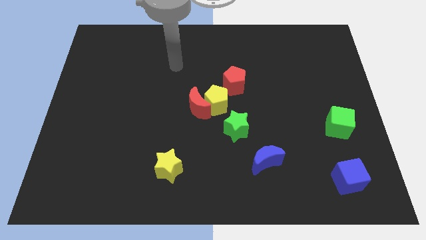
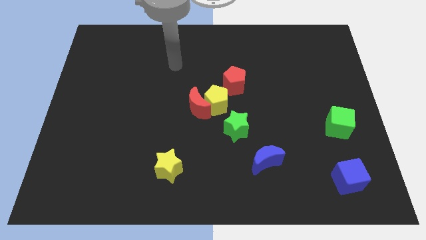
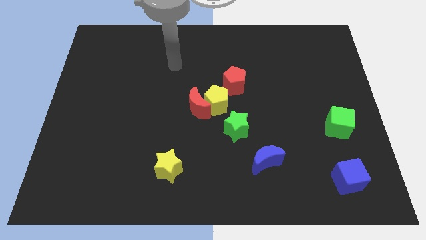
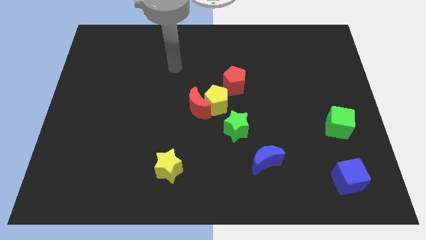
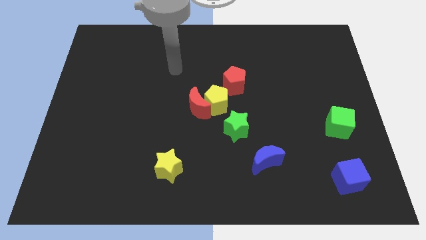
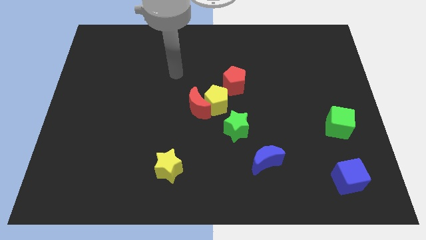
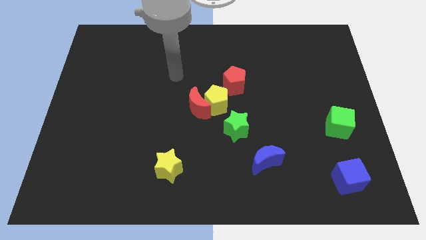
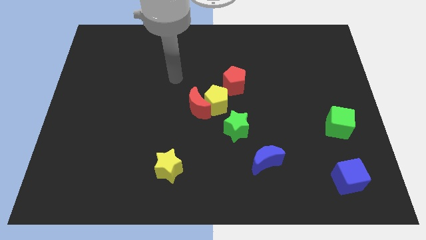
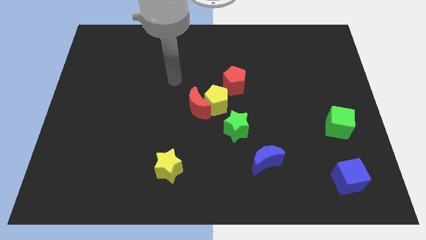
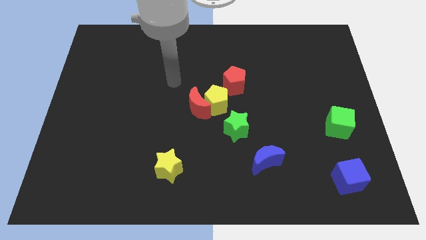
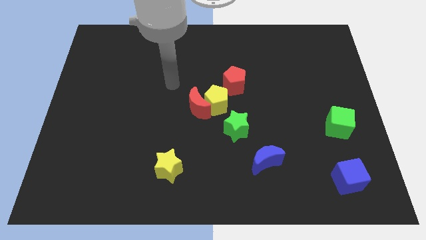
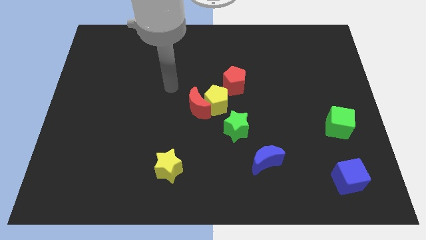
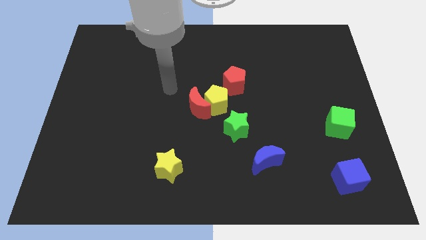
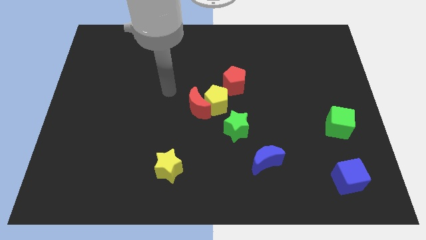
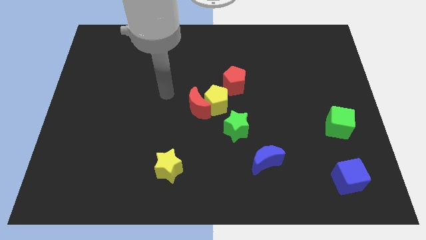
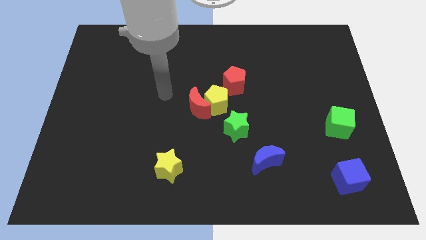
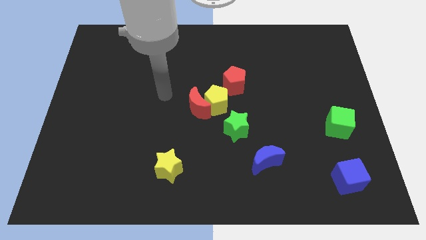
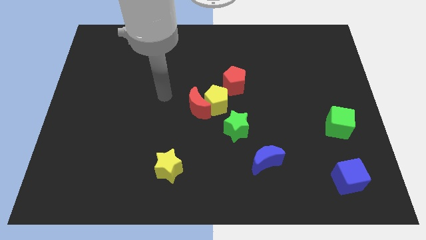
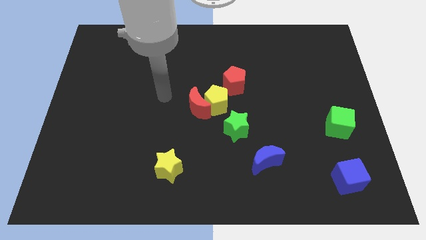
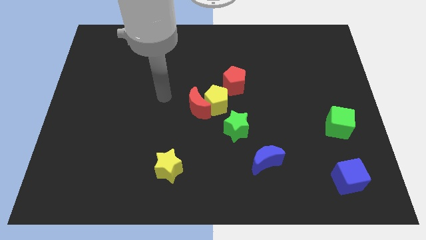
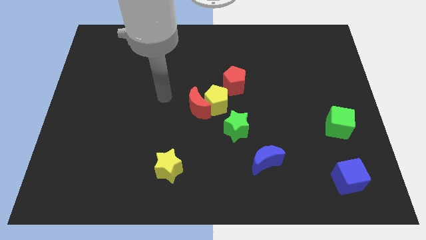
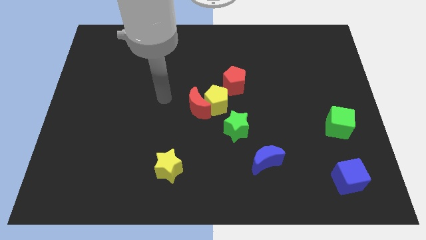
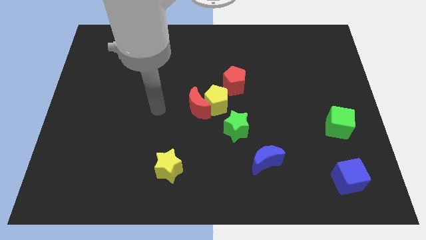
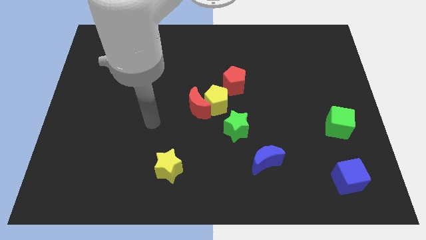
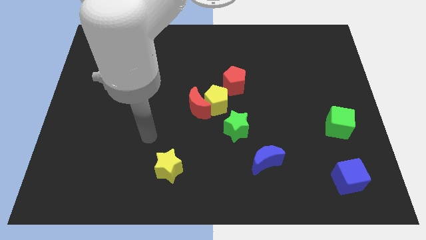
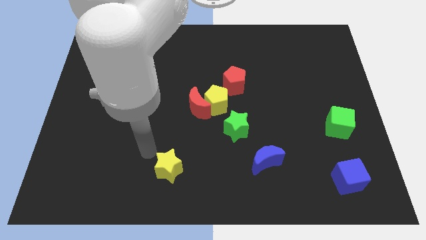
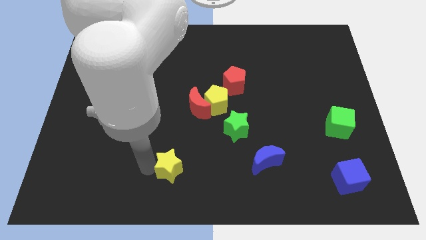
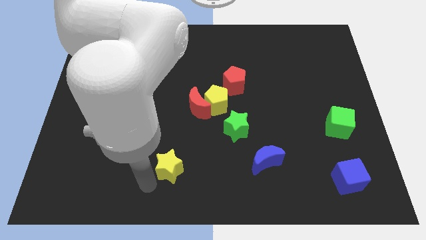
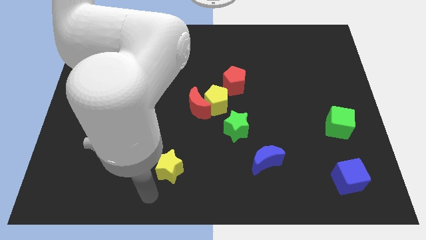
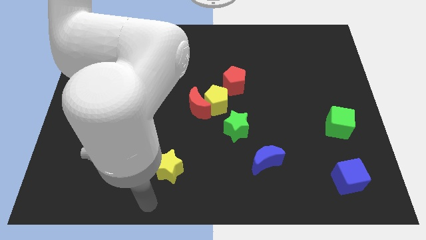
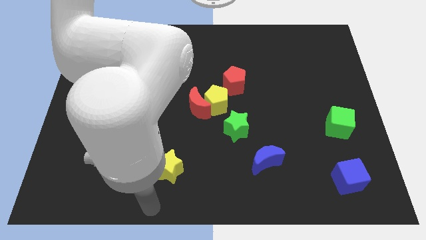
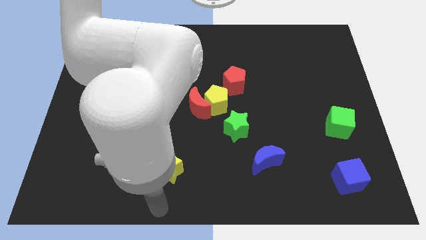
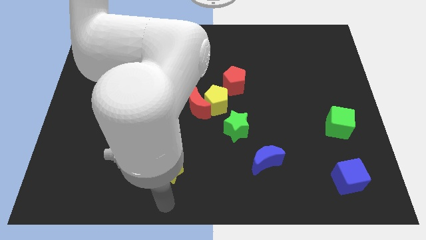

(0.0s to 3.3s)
move your arm to the bottom side of the yellow star

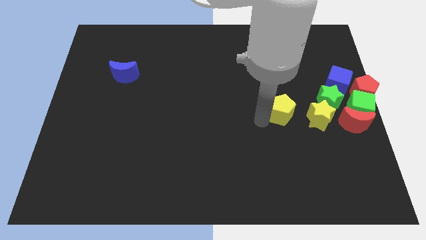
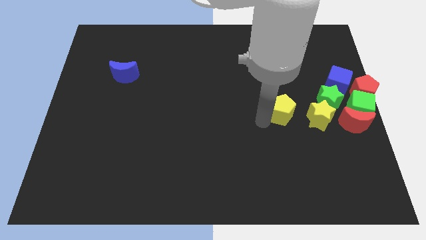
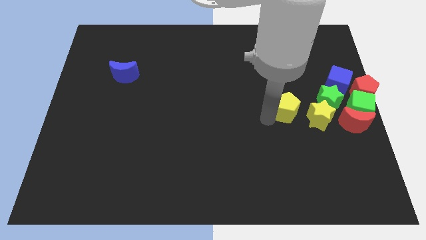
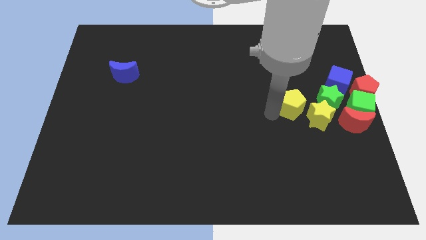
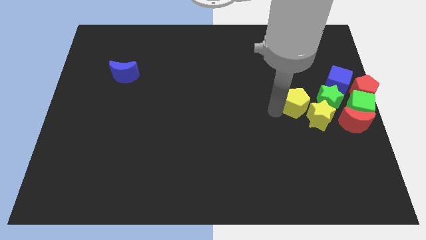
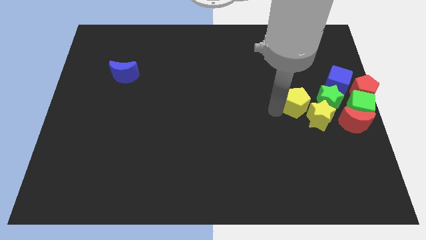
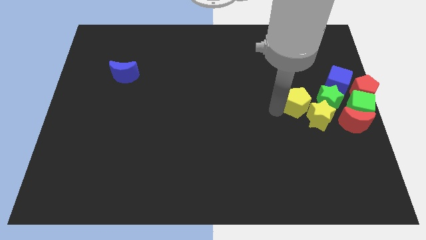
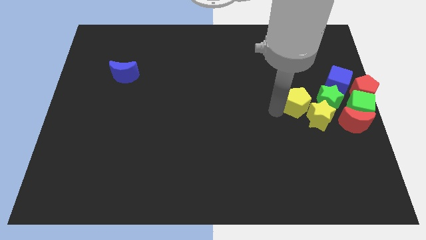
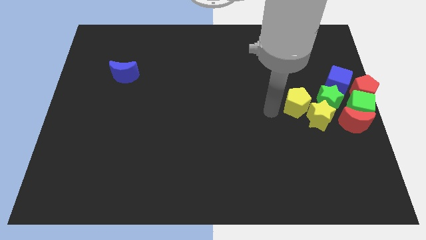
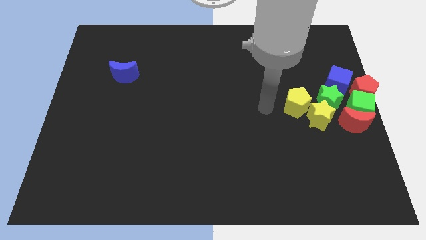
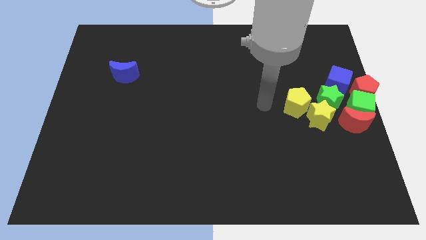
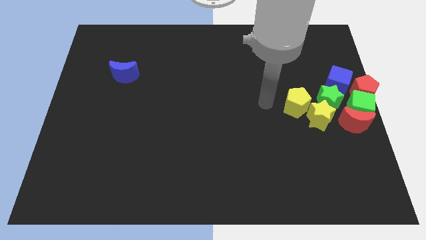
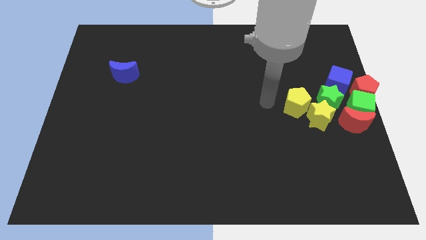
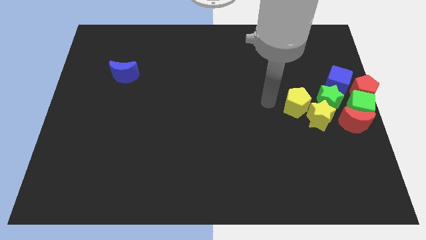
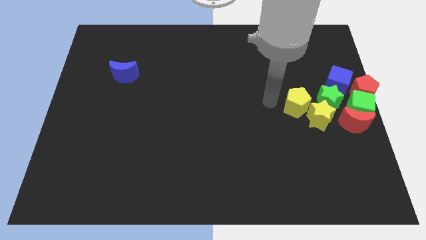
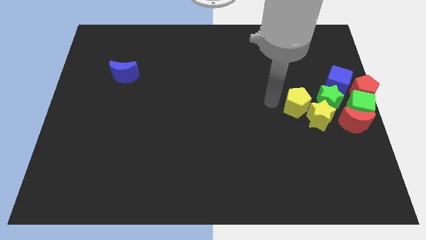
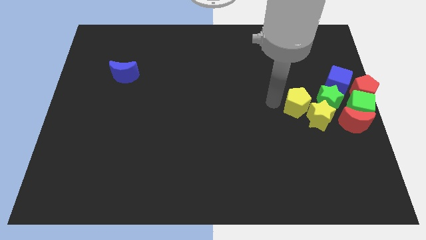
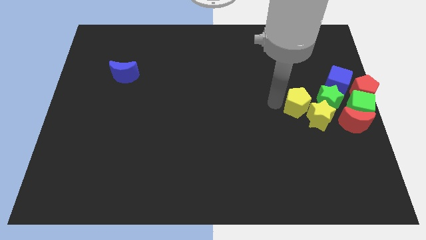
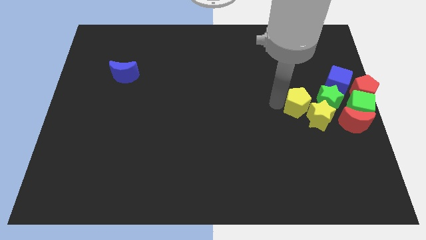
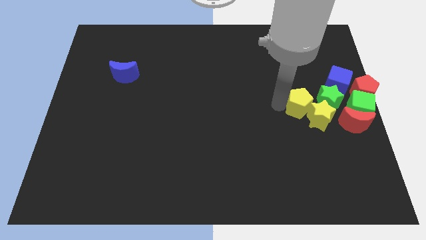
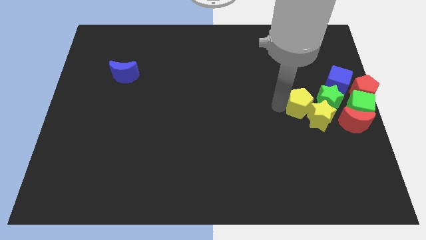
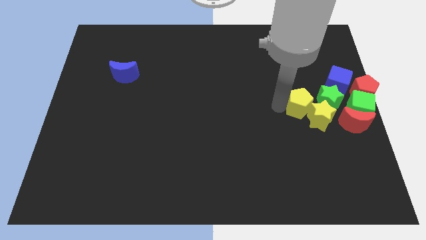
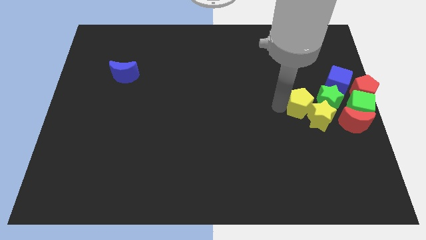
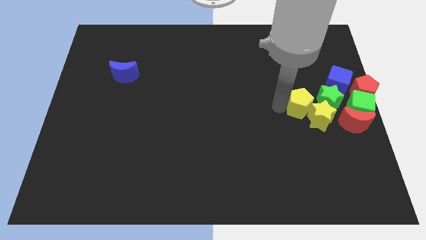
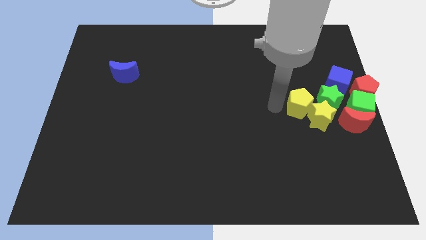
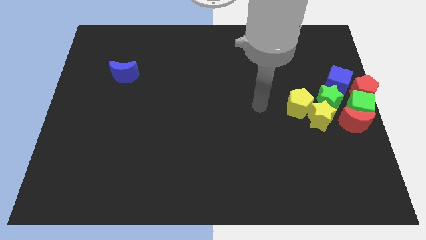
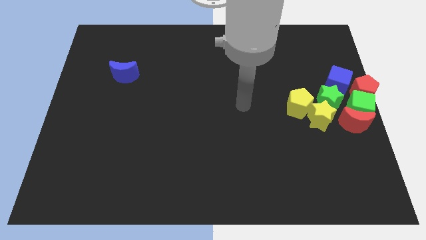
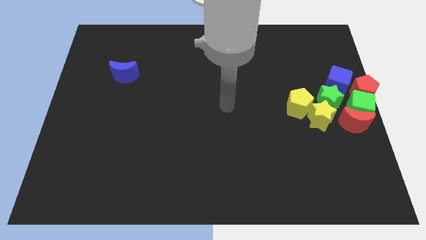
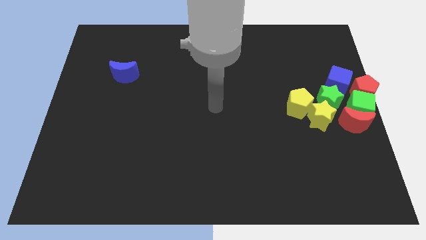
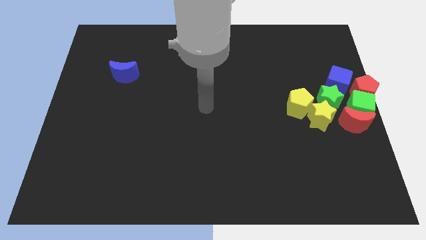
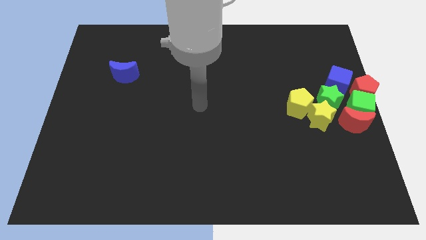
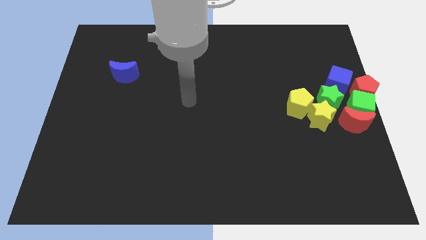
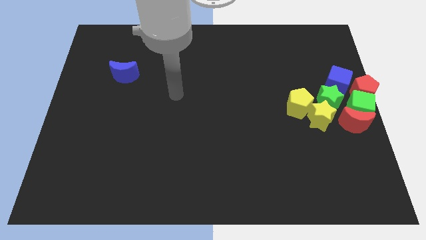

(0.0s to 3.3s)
push the yellow pentagon into the yellow star

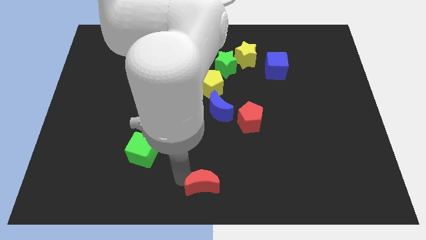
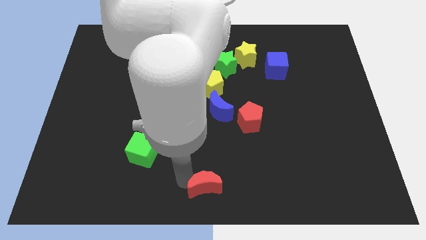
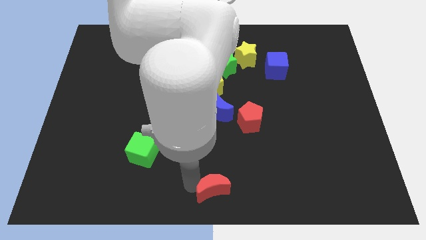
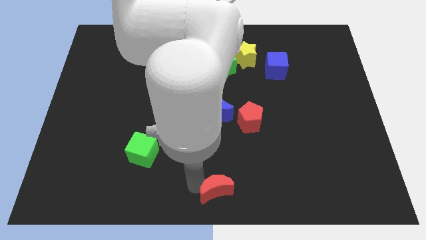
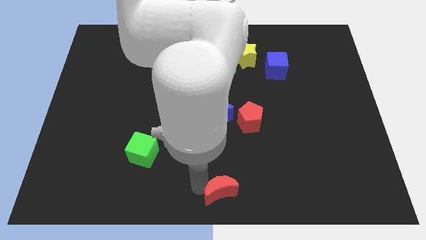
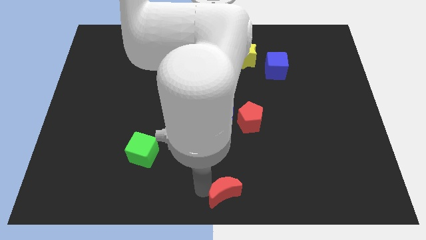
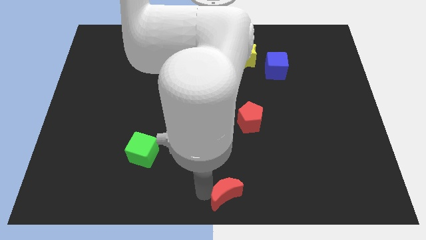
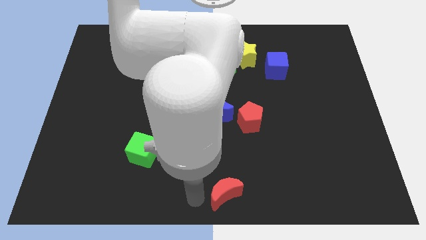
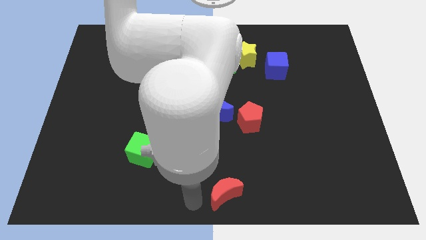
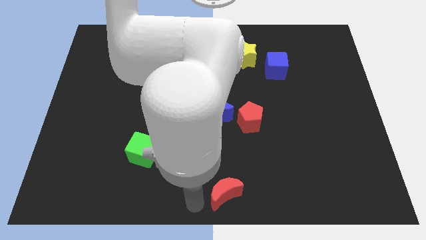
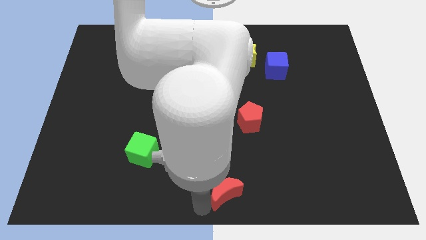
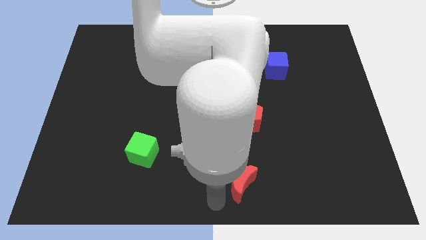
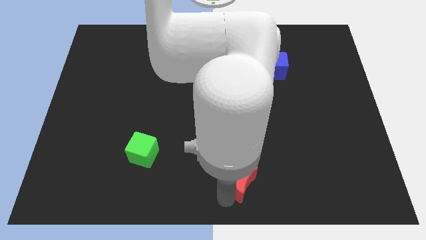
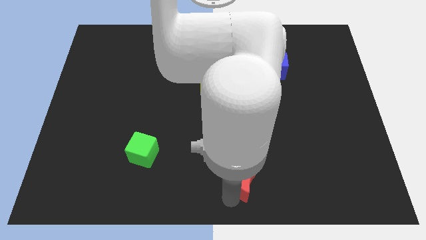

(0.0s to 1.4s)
place the red moon vertically below the red pentagon

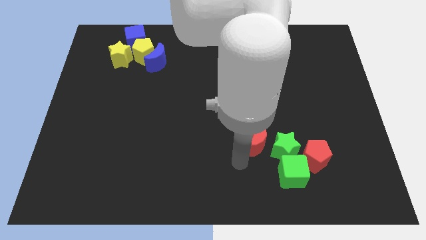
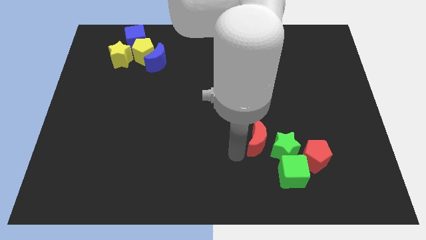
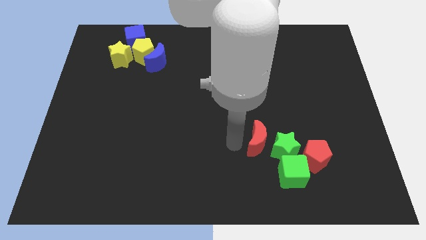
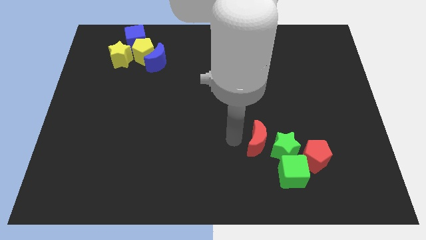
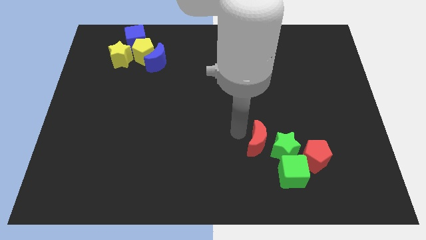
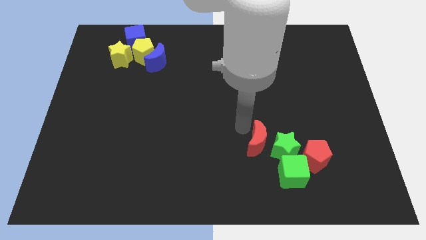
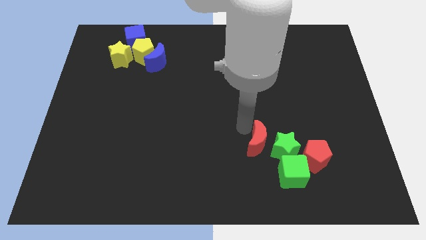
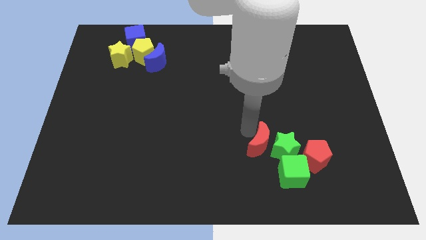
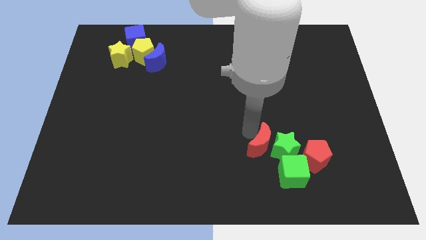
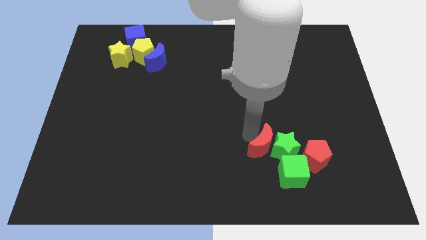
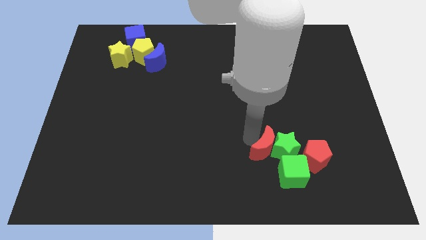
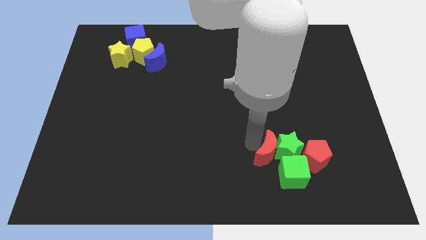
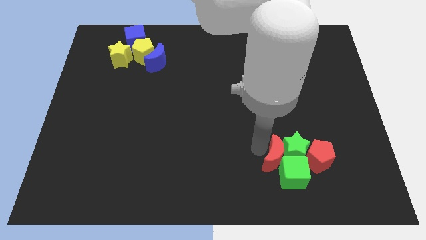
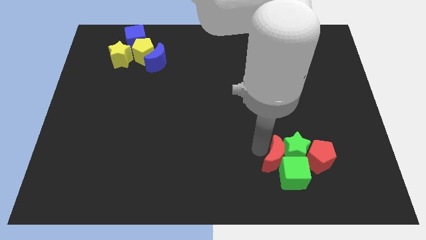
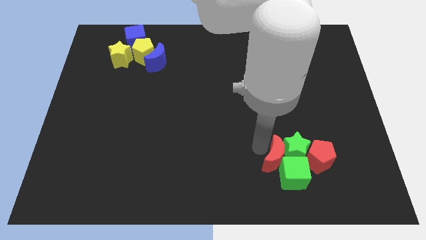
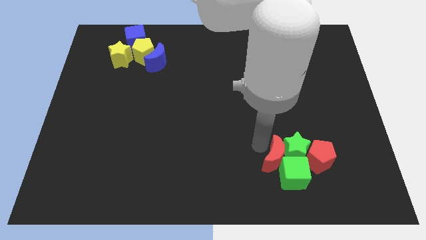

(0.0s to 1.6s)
push the red moon left to the green star
